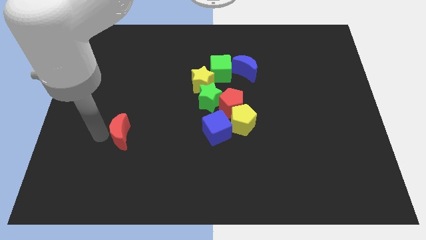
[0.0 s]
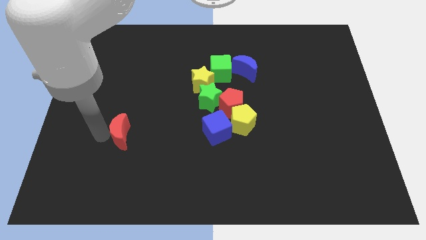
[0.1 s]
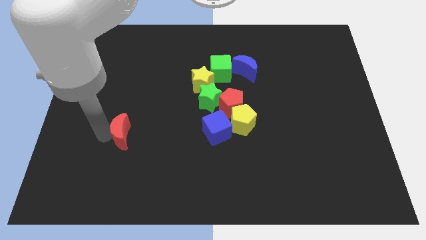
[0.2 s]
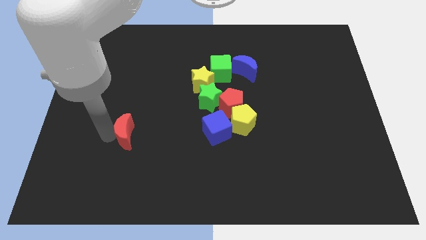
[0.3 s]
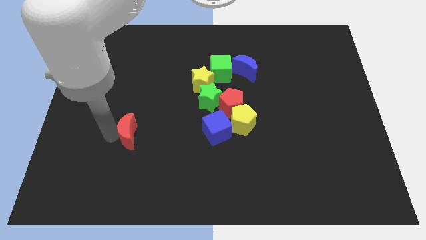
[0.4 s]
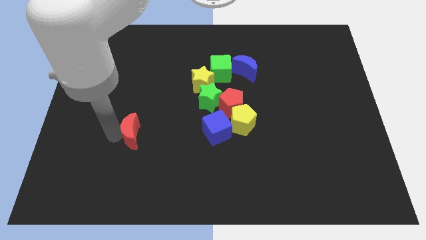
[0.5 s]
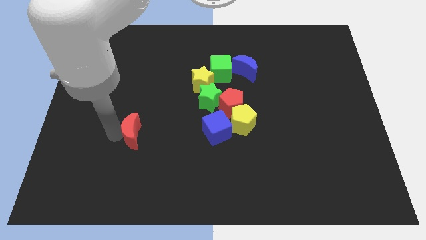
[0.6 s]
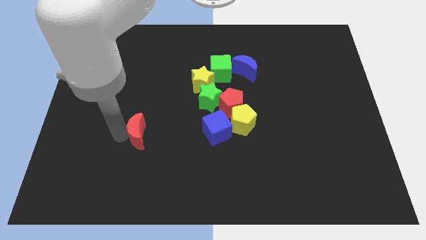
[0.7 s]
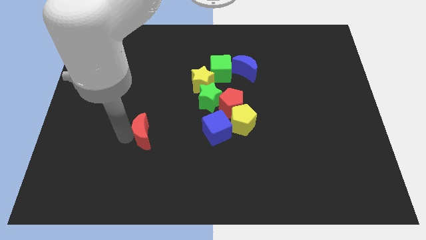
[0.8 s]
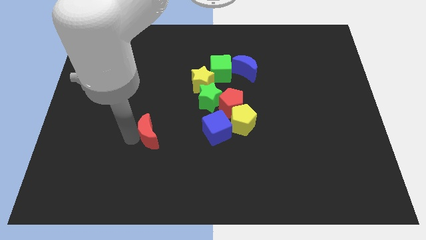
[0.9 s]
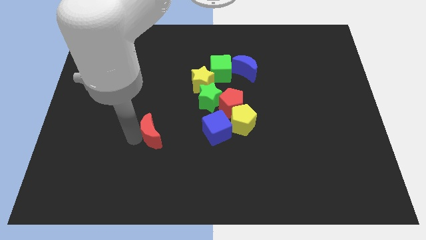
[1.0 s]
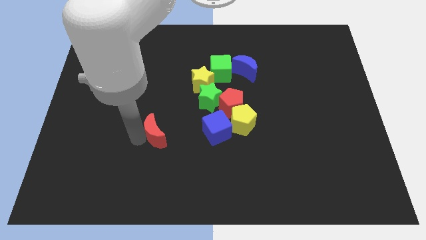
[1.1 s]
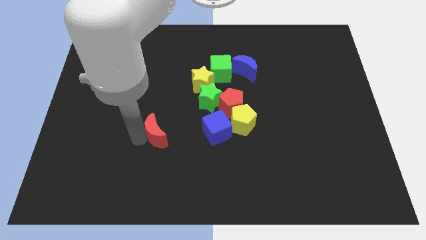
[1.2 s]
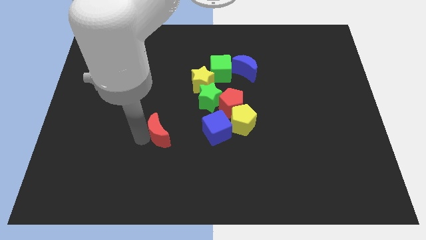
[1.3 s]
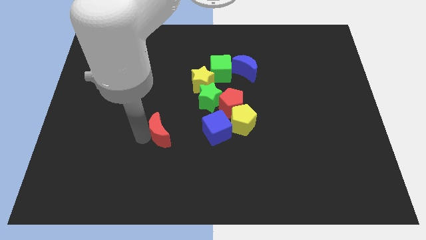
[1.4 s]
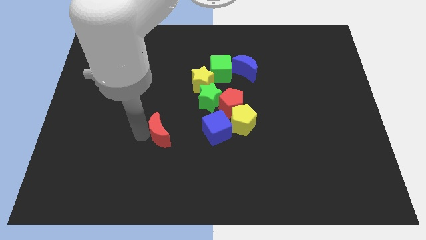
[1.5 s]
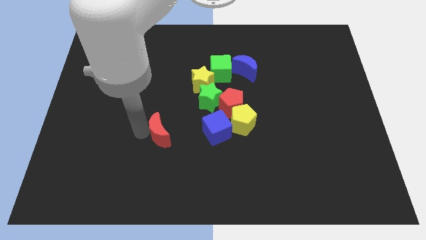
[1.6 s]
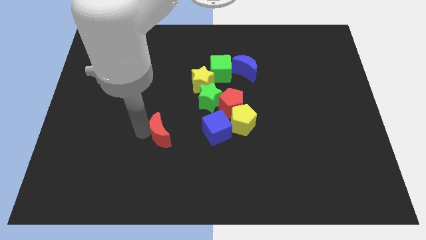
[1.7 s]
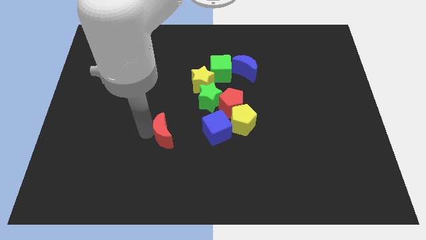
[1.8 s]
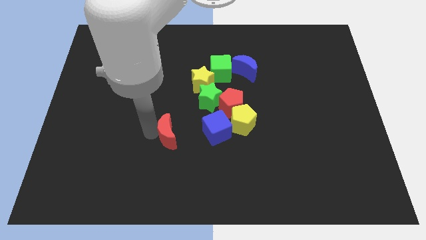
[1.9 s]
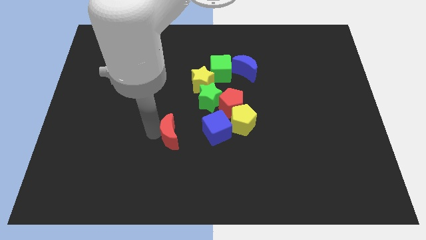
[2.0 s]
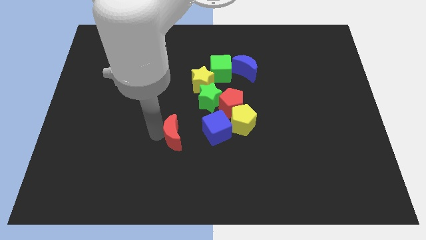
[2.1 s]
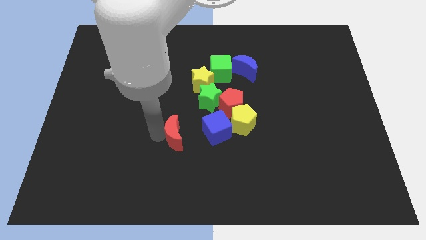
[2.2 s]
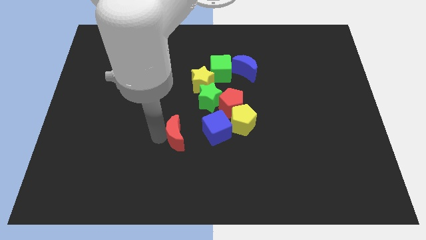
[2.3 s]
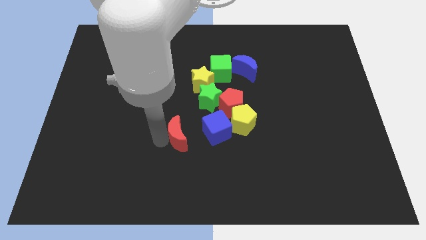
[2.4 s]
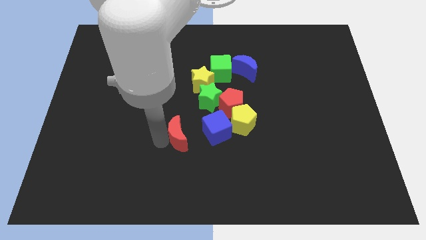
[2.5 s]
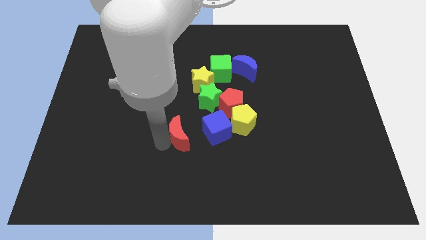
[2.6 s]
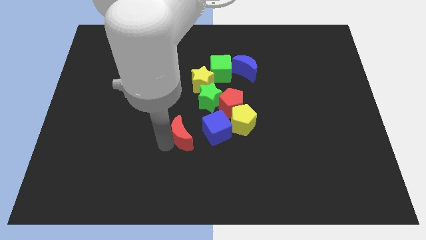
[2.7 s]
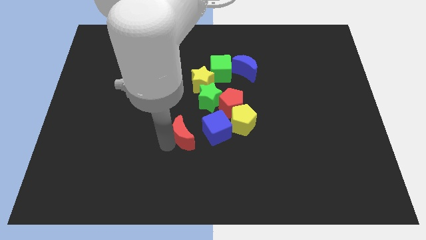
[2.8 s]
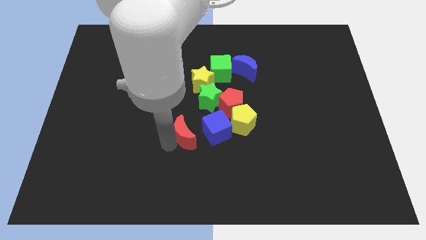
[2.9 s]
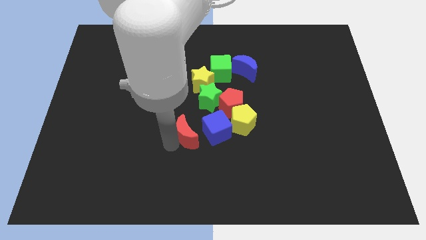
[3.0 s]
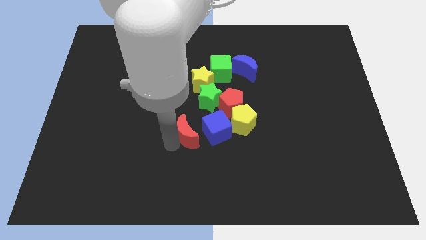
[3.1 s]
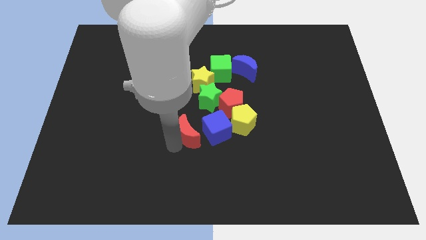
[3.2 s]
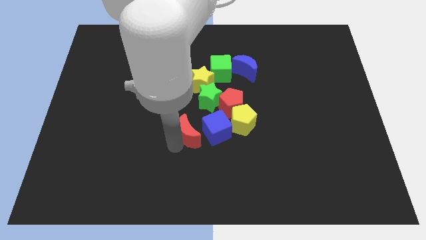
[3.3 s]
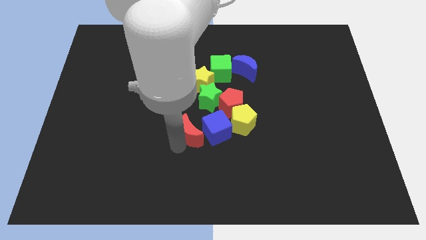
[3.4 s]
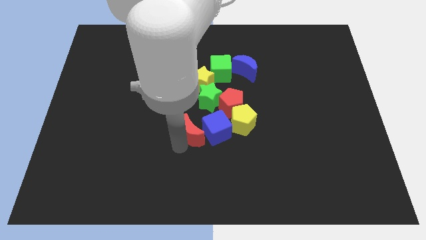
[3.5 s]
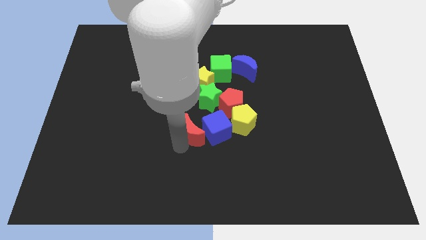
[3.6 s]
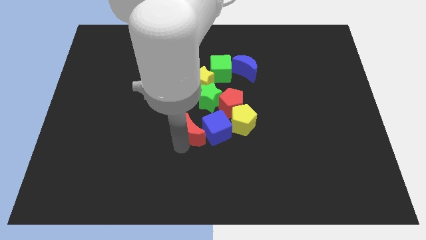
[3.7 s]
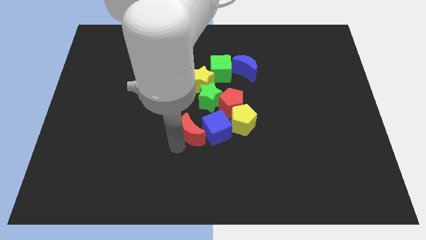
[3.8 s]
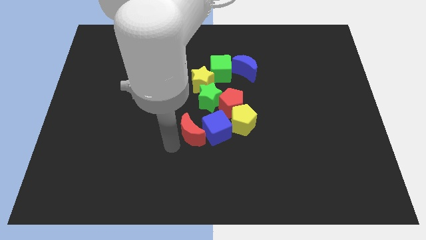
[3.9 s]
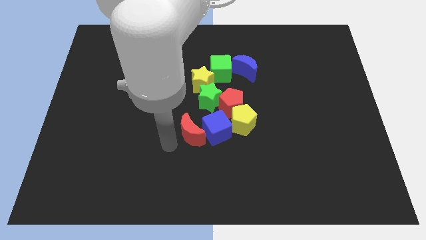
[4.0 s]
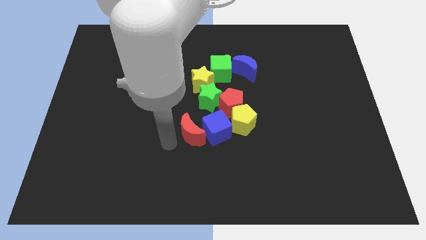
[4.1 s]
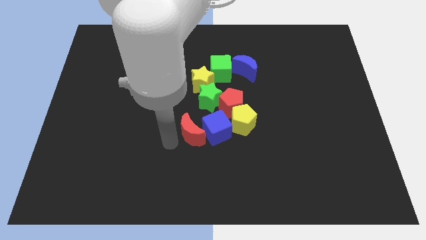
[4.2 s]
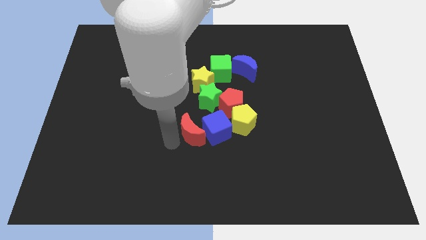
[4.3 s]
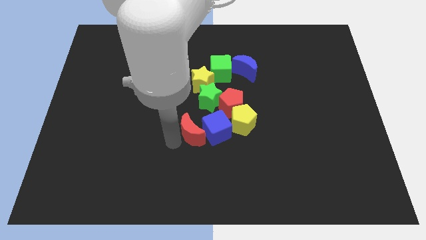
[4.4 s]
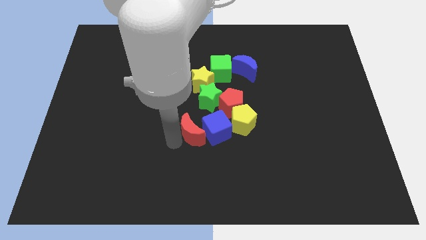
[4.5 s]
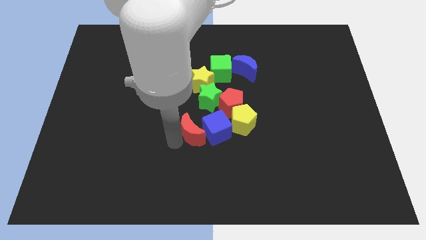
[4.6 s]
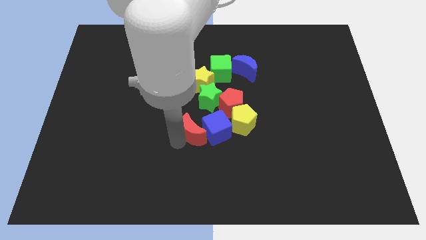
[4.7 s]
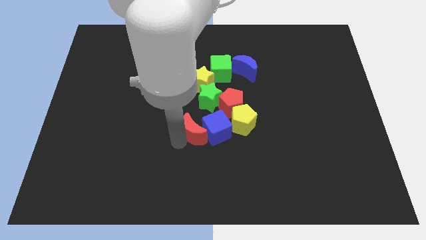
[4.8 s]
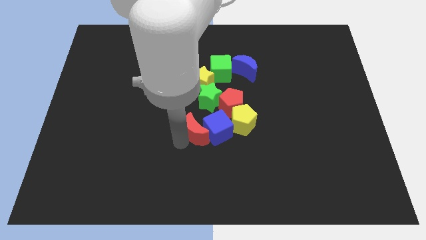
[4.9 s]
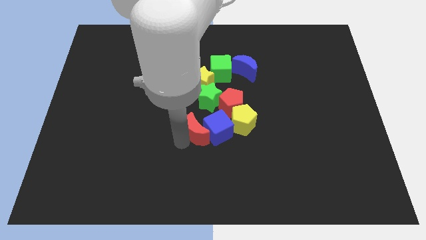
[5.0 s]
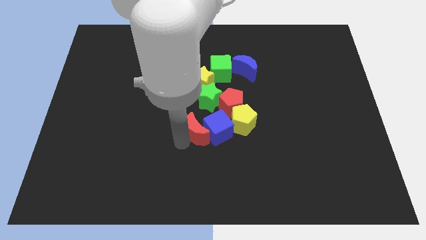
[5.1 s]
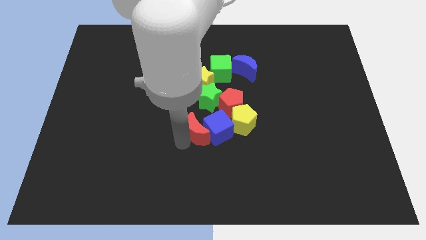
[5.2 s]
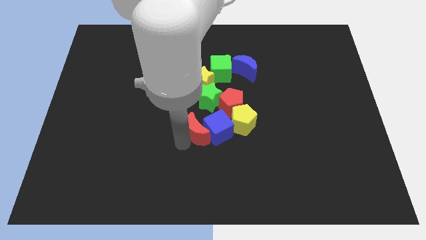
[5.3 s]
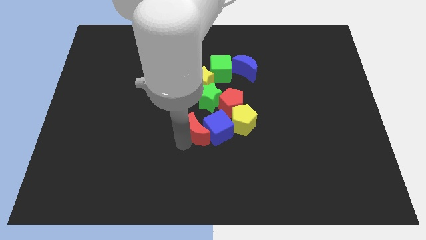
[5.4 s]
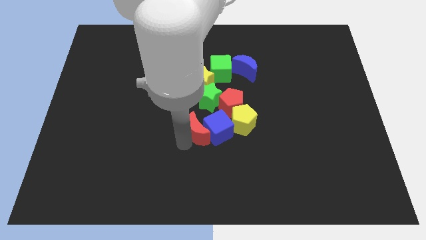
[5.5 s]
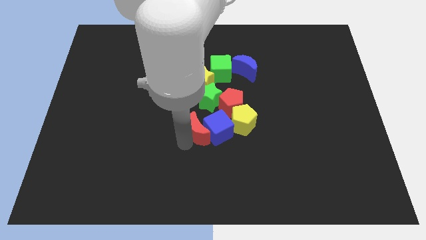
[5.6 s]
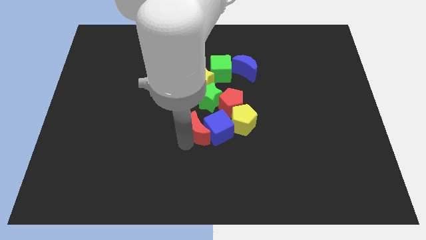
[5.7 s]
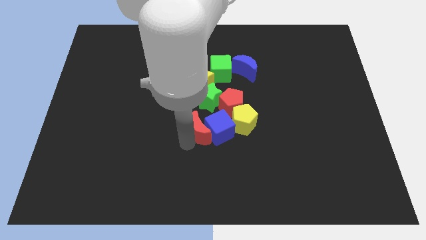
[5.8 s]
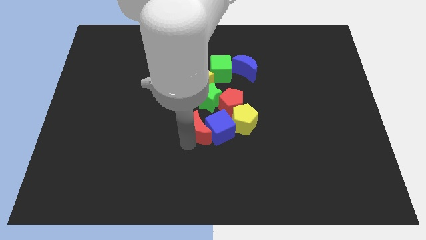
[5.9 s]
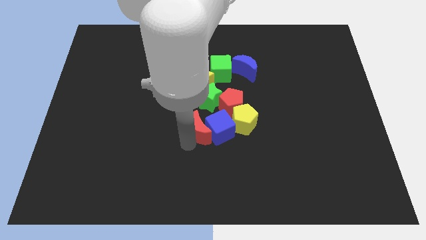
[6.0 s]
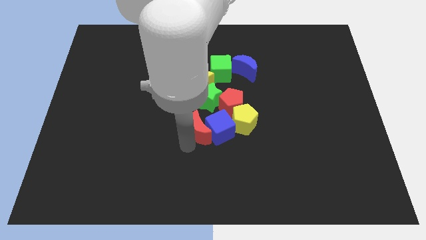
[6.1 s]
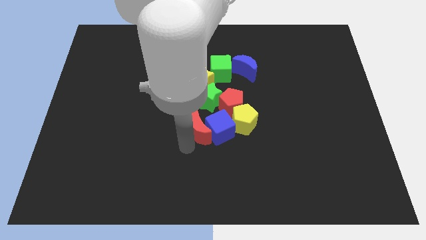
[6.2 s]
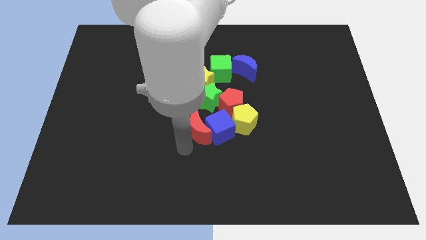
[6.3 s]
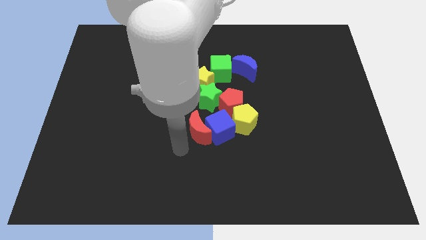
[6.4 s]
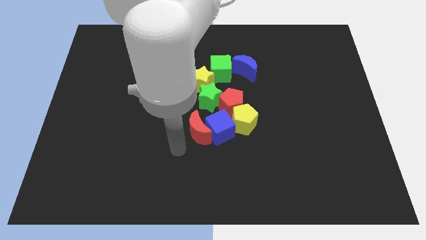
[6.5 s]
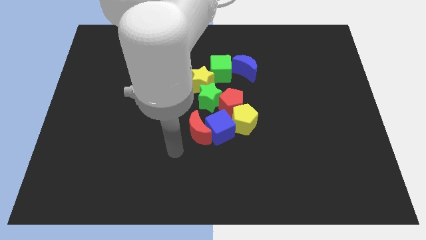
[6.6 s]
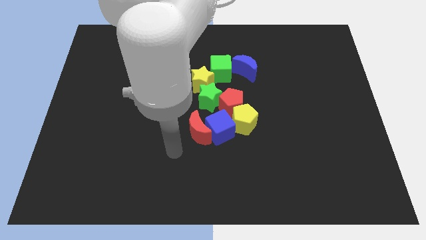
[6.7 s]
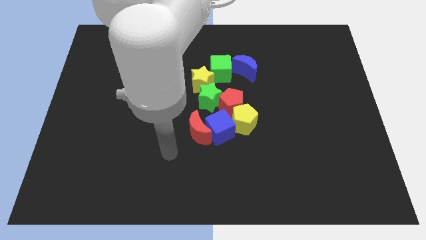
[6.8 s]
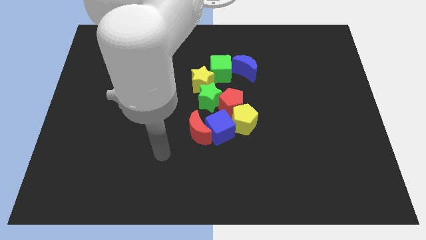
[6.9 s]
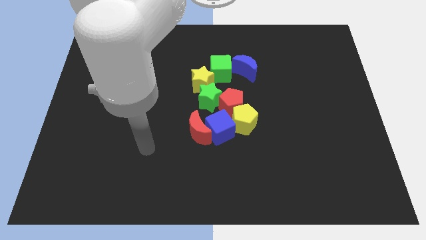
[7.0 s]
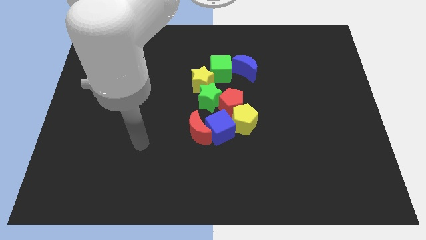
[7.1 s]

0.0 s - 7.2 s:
push the red crescent into the blue cube

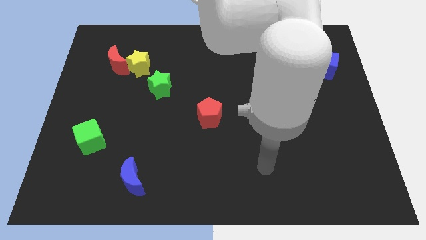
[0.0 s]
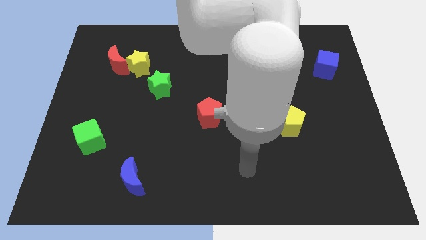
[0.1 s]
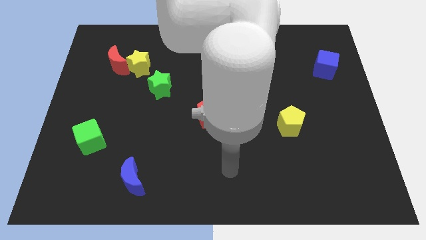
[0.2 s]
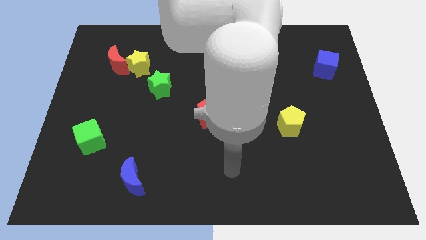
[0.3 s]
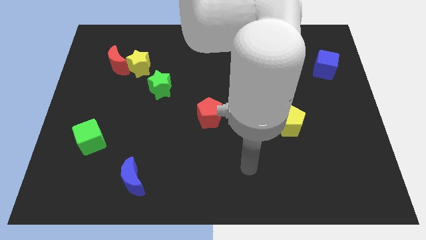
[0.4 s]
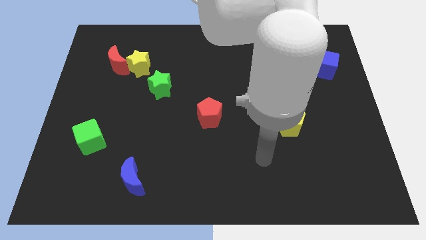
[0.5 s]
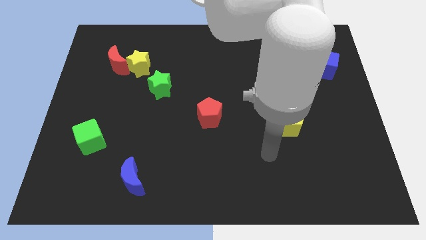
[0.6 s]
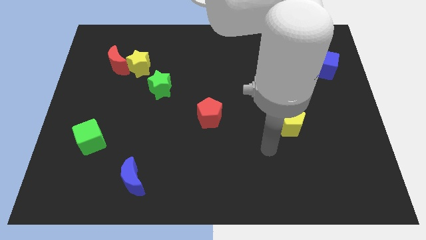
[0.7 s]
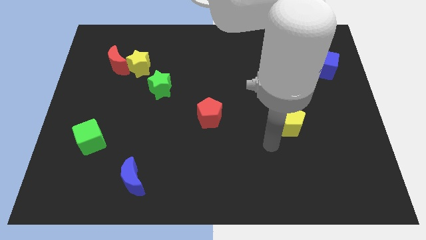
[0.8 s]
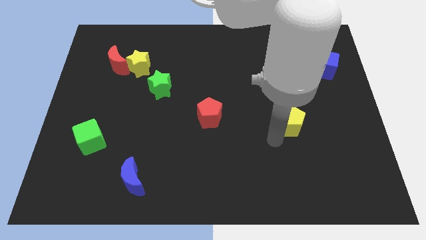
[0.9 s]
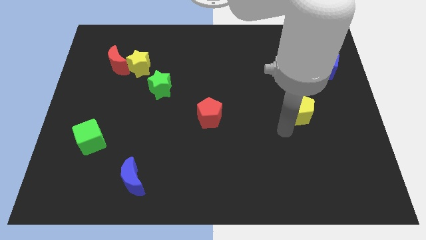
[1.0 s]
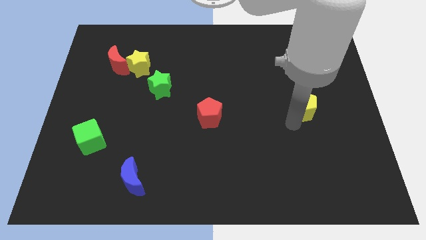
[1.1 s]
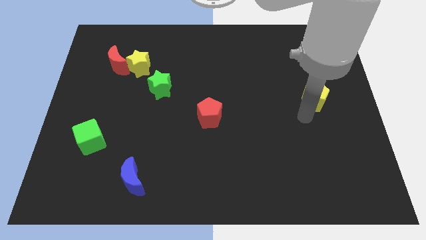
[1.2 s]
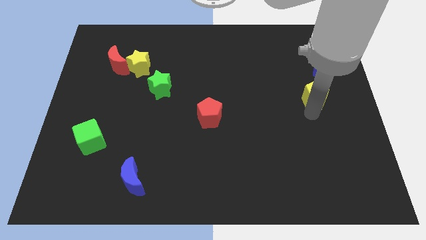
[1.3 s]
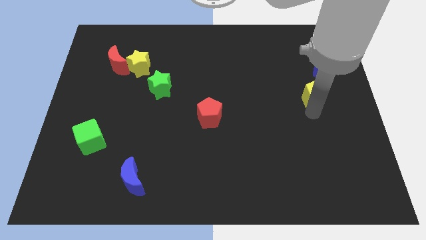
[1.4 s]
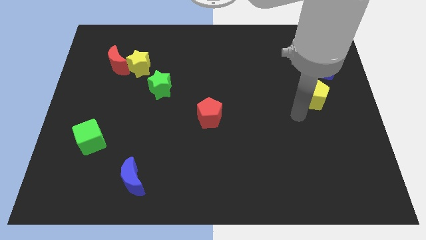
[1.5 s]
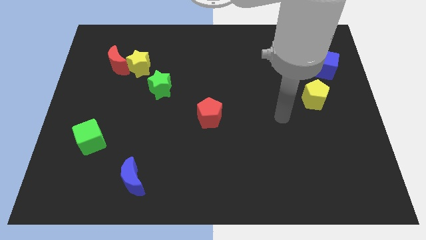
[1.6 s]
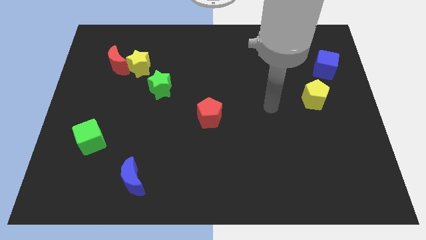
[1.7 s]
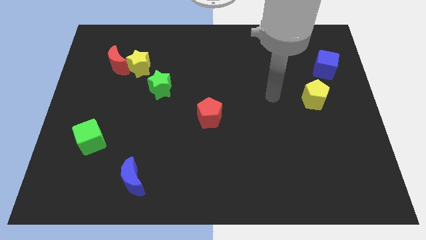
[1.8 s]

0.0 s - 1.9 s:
push the yellow pentagon towards the blue cube
